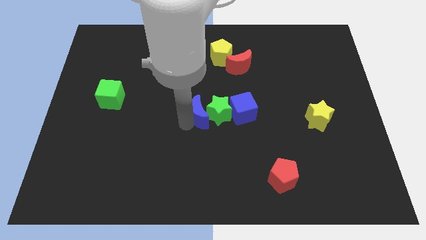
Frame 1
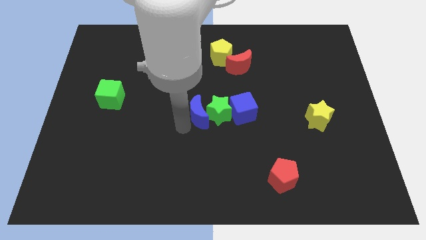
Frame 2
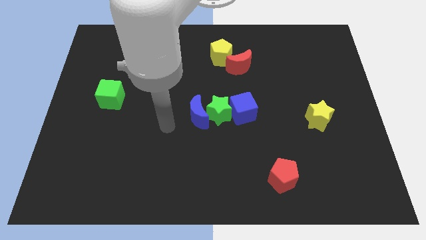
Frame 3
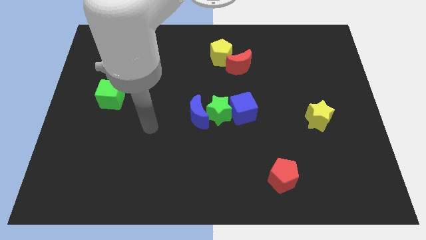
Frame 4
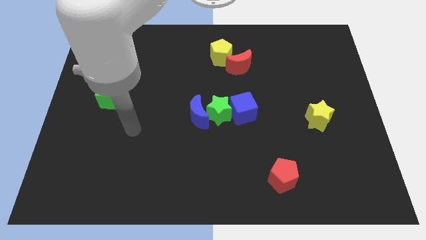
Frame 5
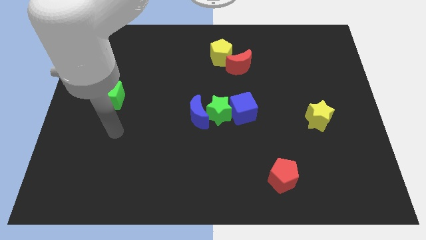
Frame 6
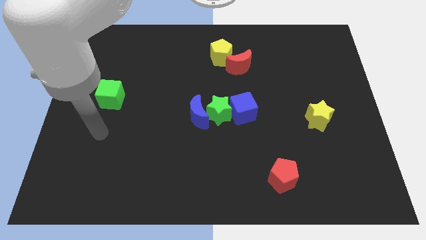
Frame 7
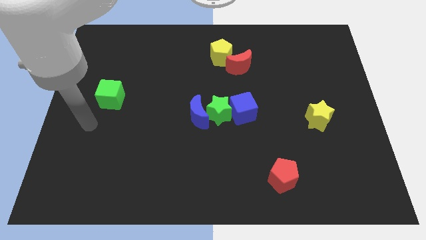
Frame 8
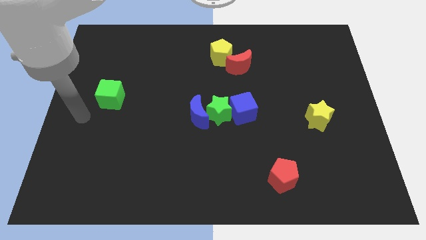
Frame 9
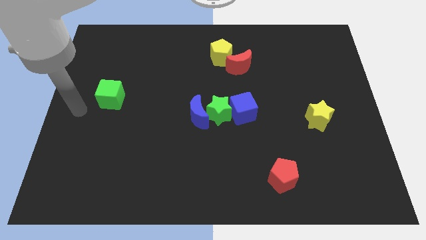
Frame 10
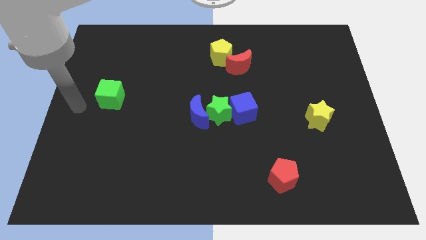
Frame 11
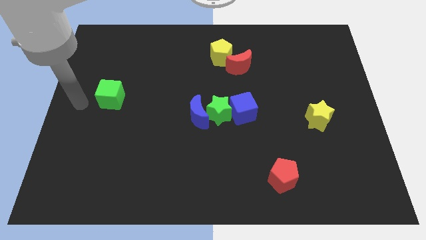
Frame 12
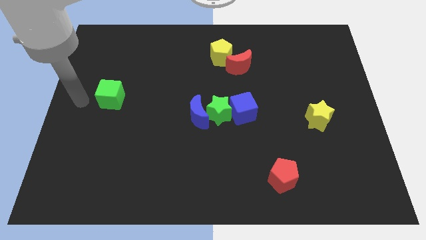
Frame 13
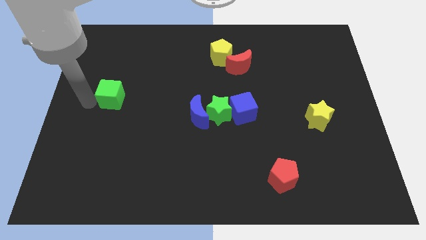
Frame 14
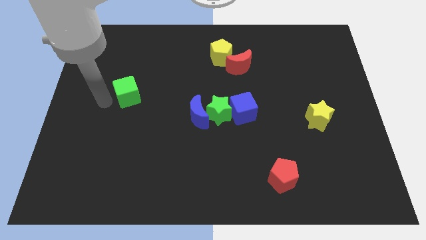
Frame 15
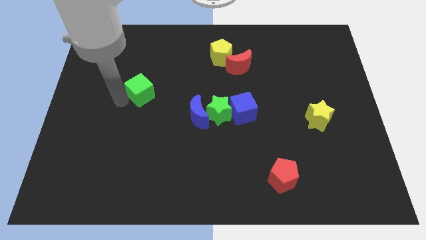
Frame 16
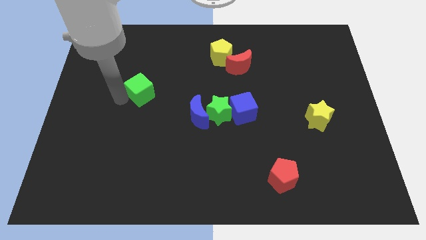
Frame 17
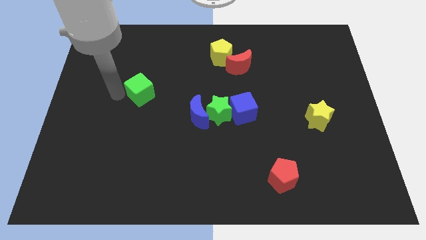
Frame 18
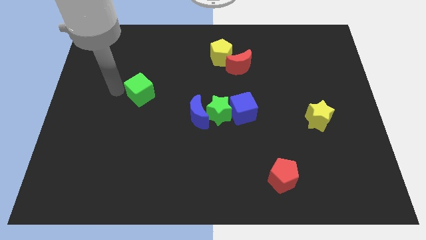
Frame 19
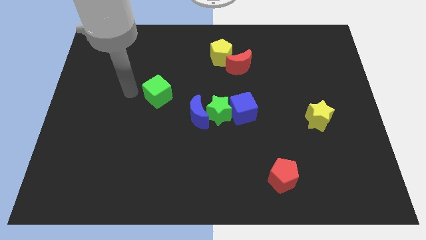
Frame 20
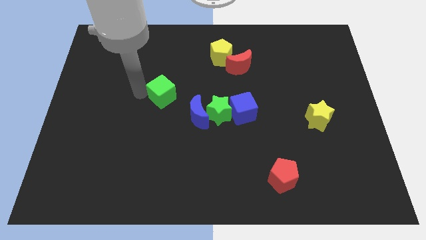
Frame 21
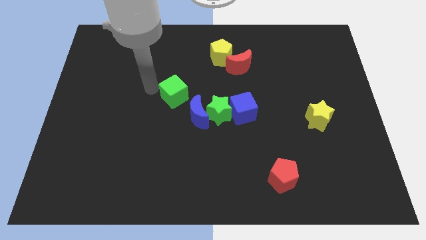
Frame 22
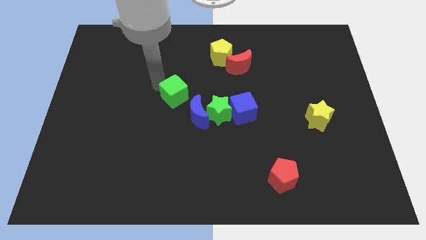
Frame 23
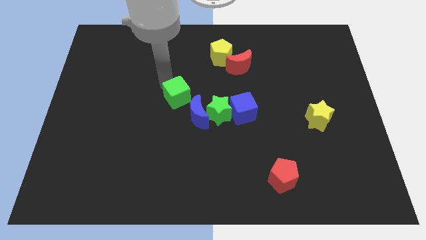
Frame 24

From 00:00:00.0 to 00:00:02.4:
place the green cube at the top left side of blue moon

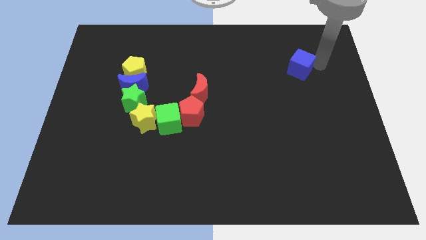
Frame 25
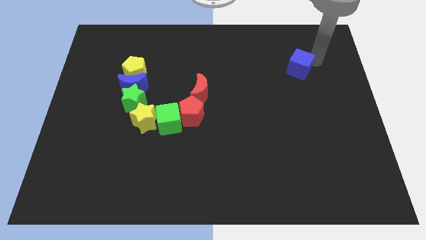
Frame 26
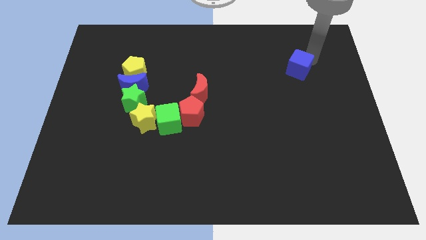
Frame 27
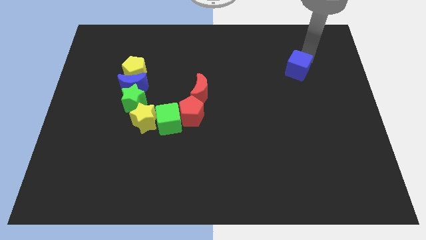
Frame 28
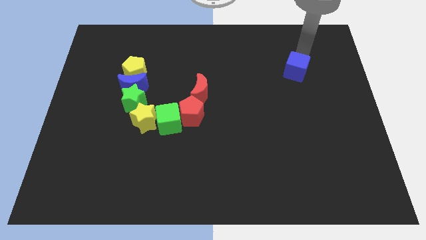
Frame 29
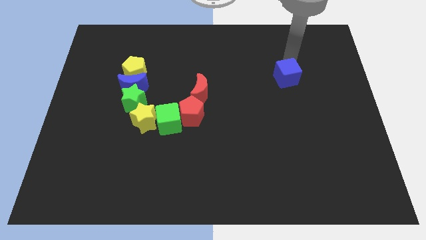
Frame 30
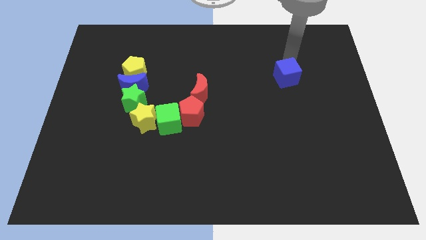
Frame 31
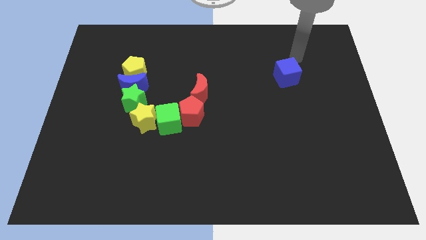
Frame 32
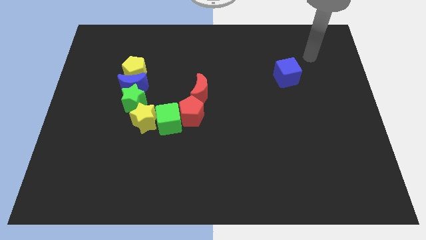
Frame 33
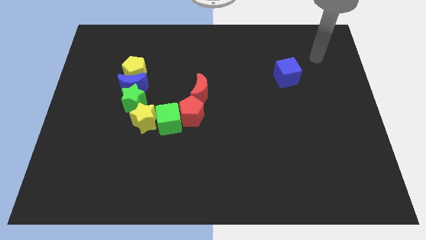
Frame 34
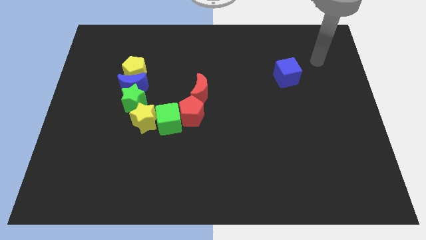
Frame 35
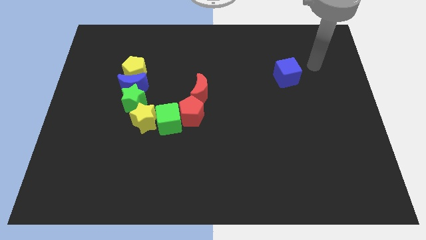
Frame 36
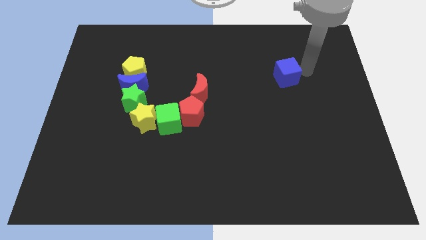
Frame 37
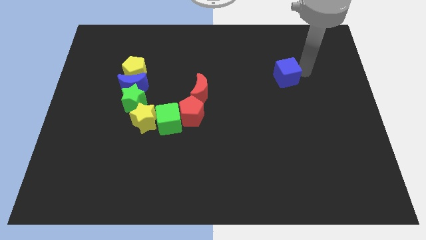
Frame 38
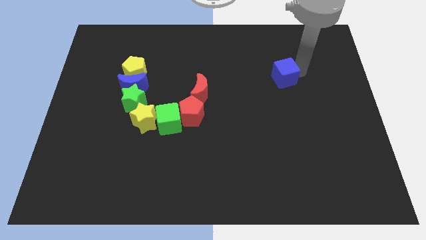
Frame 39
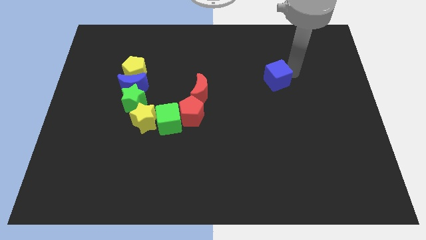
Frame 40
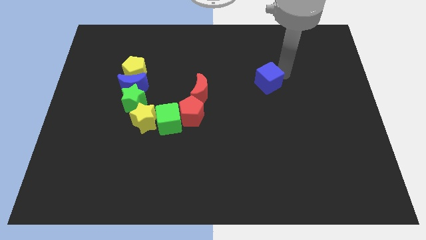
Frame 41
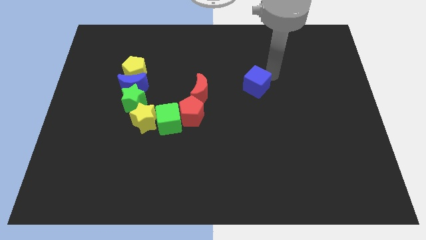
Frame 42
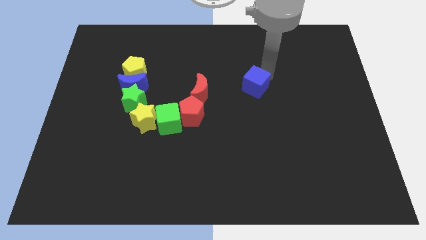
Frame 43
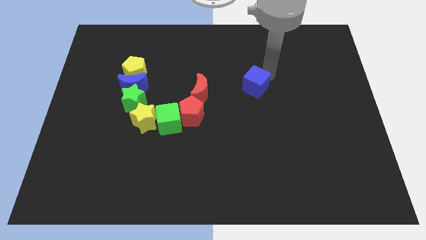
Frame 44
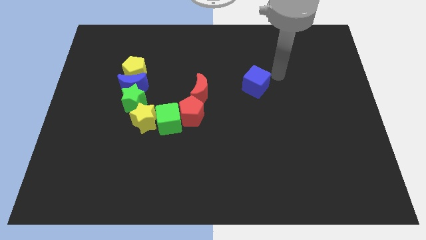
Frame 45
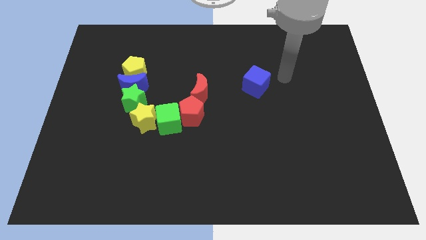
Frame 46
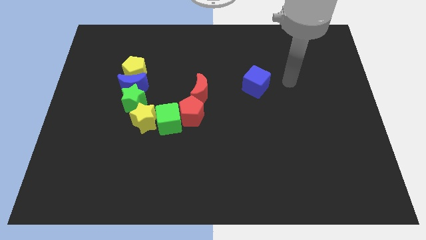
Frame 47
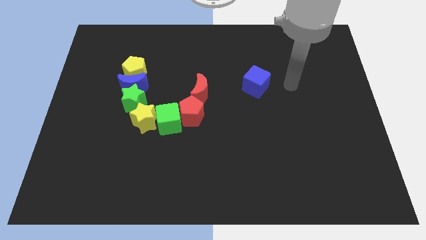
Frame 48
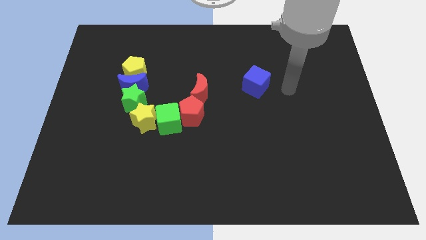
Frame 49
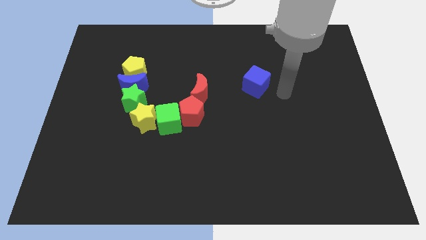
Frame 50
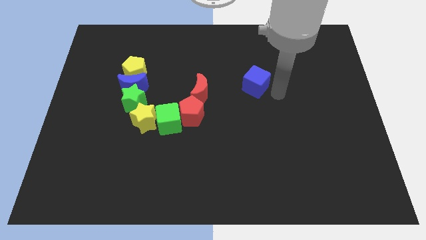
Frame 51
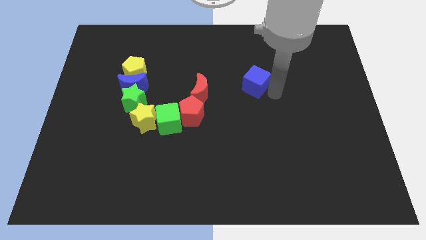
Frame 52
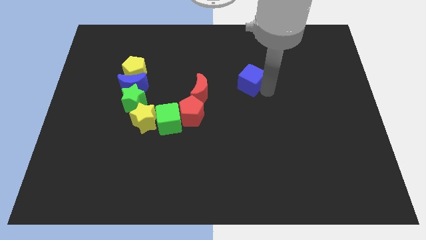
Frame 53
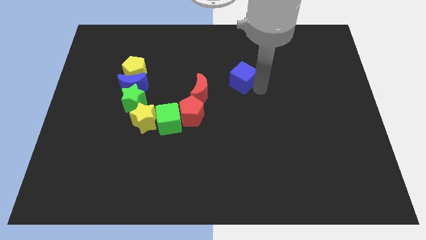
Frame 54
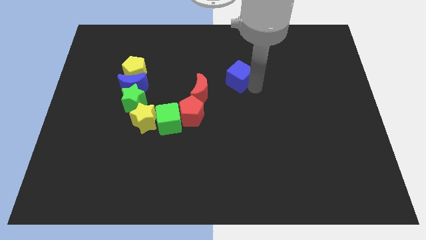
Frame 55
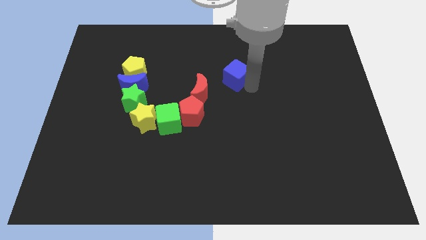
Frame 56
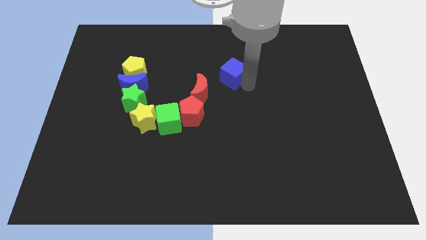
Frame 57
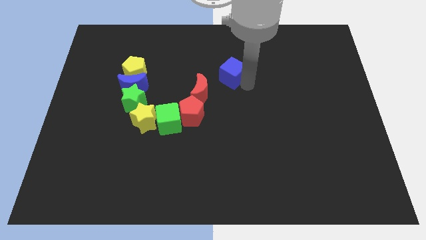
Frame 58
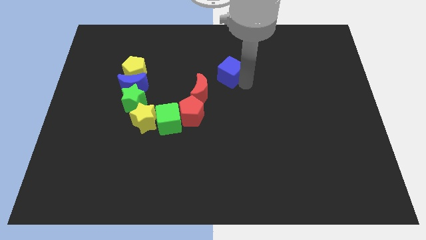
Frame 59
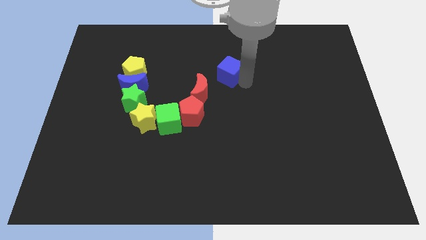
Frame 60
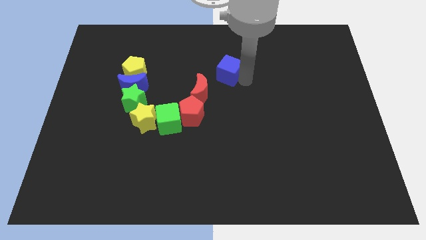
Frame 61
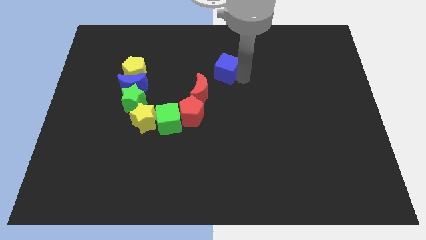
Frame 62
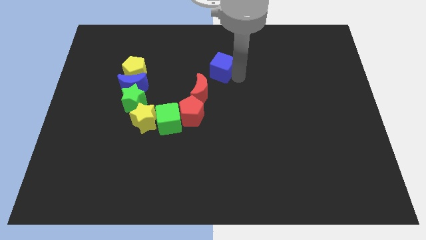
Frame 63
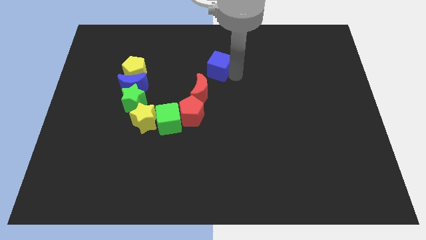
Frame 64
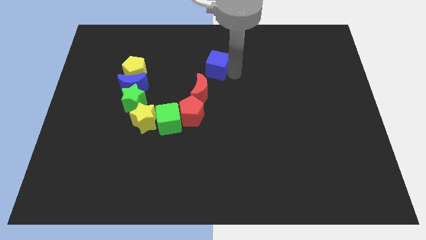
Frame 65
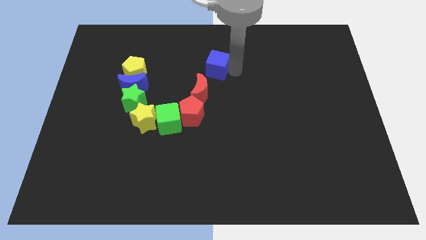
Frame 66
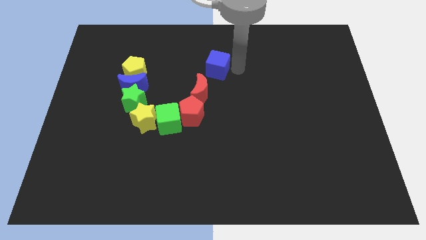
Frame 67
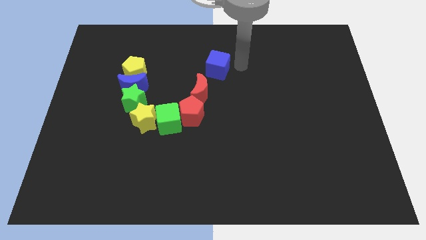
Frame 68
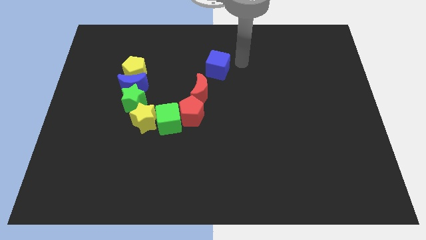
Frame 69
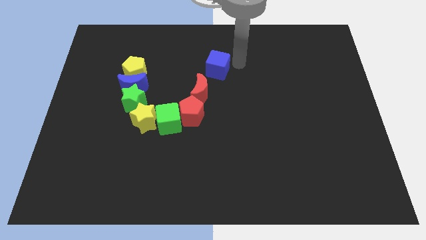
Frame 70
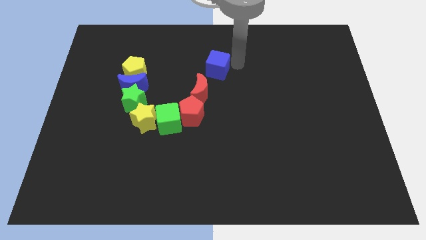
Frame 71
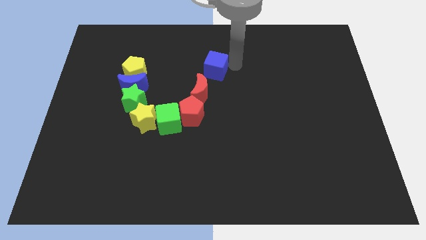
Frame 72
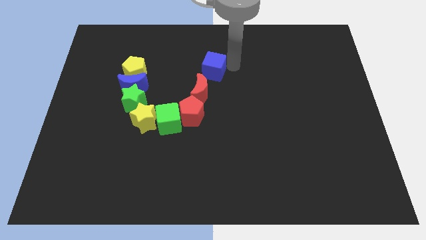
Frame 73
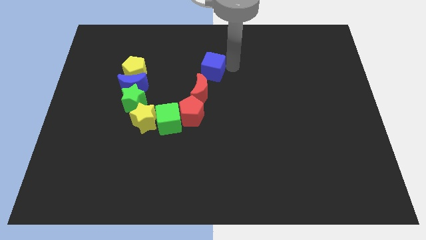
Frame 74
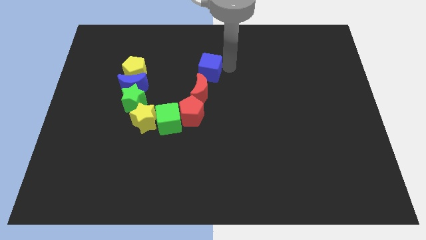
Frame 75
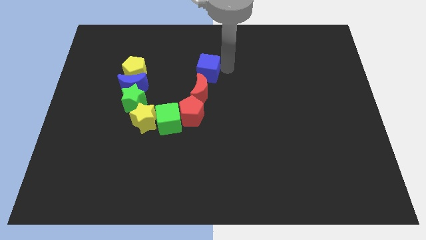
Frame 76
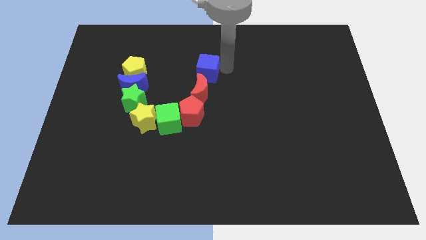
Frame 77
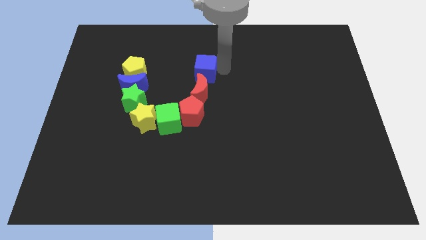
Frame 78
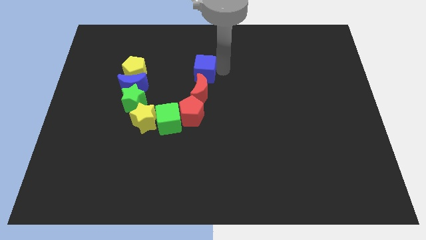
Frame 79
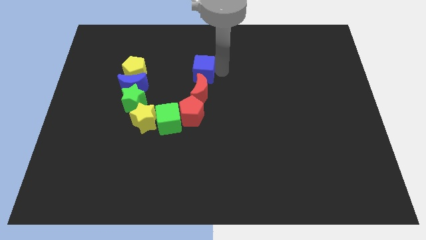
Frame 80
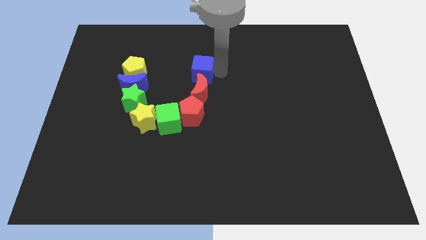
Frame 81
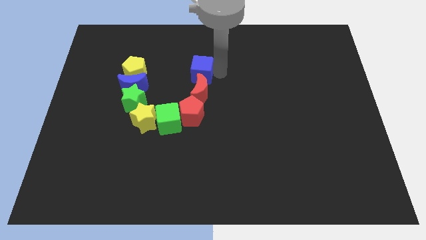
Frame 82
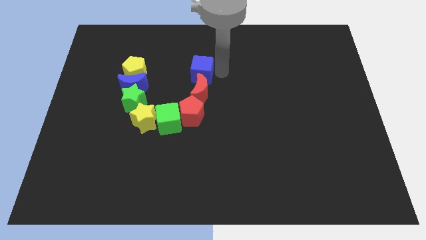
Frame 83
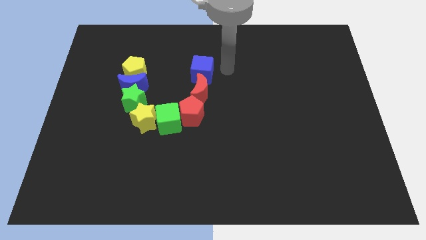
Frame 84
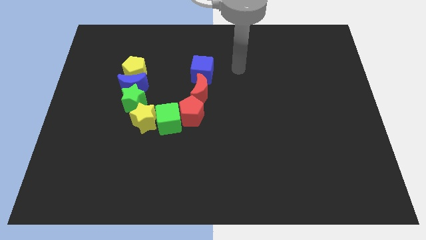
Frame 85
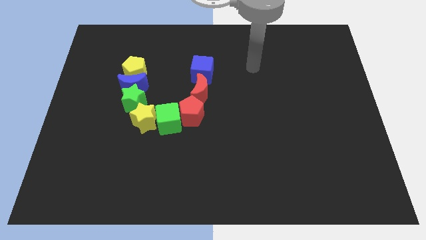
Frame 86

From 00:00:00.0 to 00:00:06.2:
place the blue cube at the top of the red moon

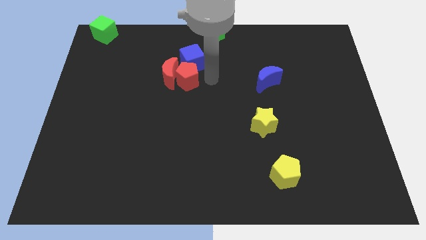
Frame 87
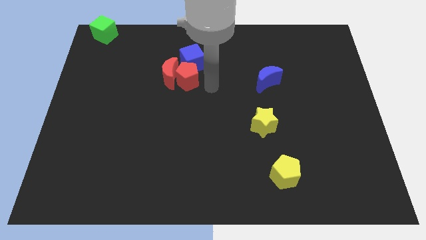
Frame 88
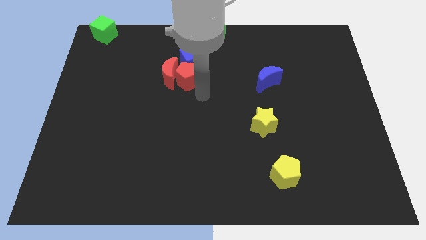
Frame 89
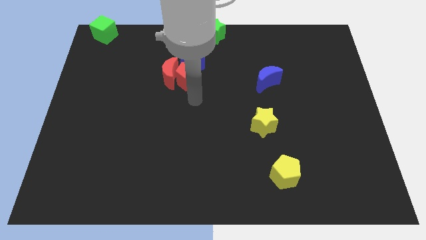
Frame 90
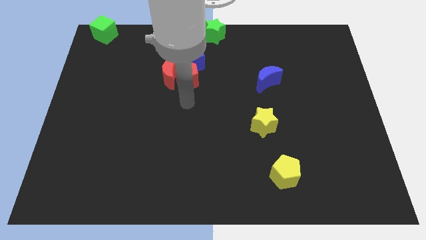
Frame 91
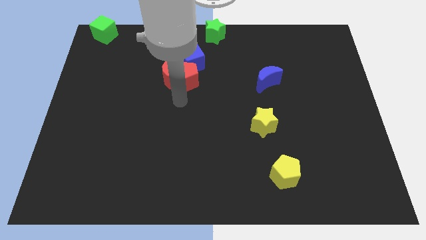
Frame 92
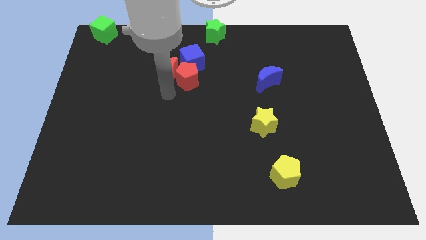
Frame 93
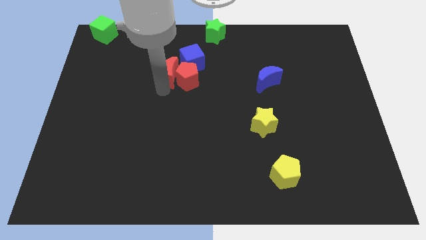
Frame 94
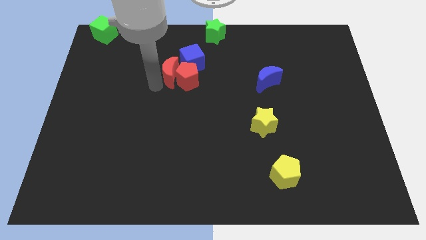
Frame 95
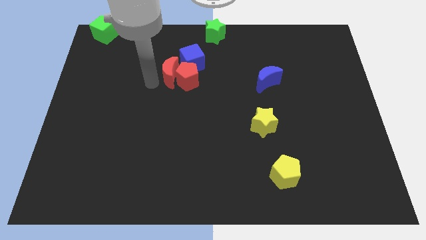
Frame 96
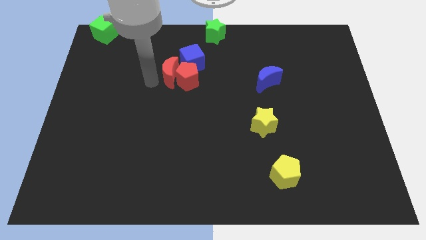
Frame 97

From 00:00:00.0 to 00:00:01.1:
move the arm towards the left side of the red crescent
